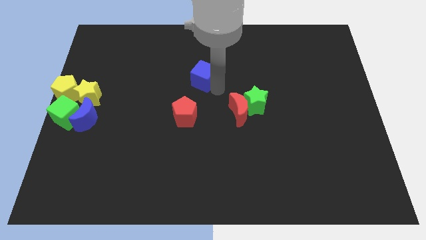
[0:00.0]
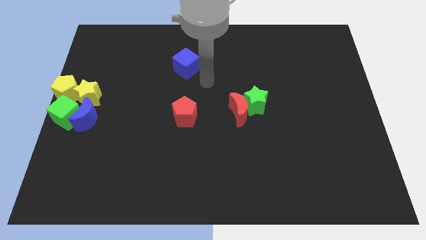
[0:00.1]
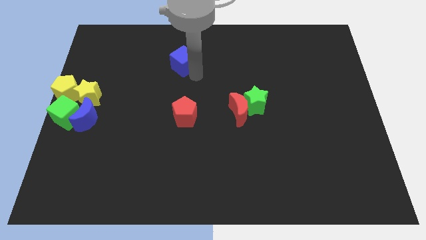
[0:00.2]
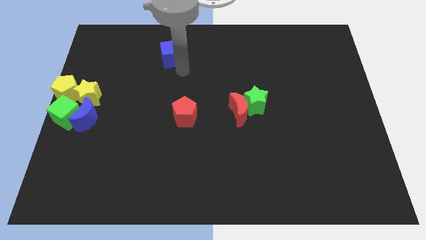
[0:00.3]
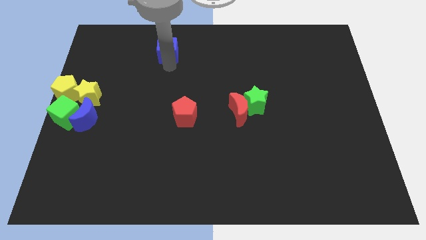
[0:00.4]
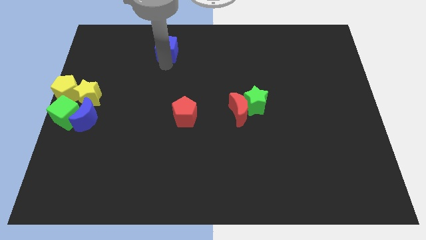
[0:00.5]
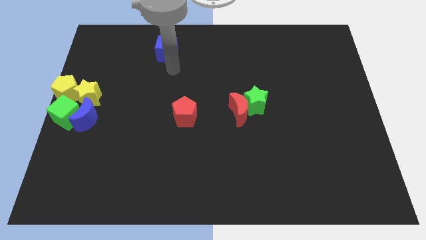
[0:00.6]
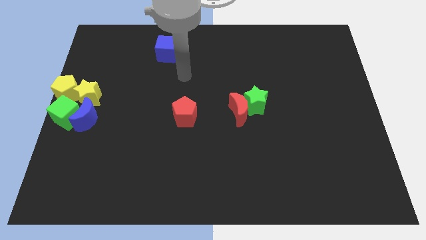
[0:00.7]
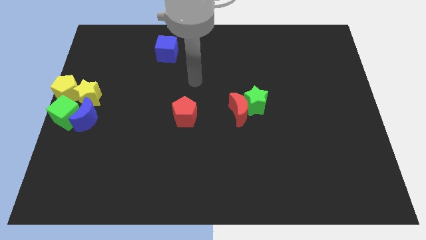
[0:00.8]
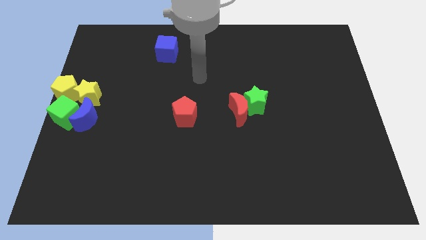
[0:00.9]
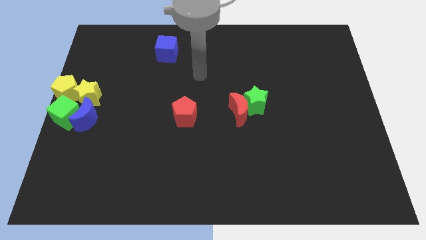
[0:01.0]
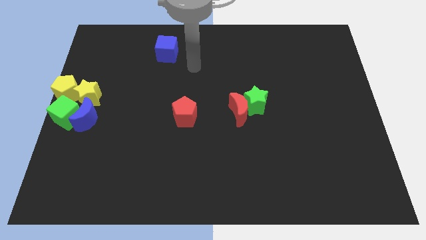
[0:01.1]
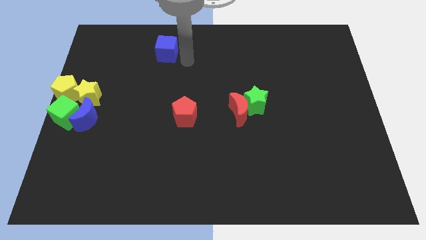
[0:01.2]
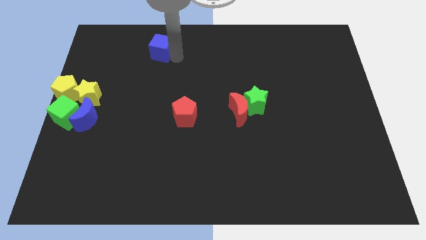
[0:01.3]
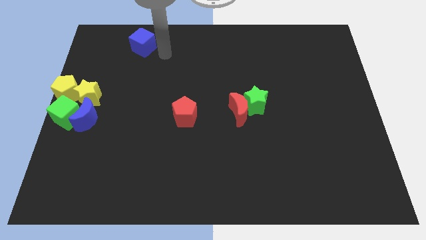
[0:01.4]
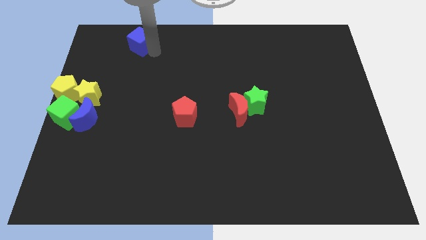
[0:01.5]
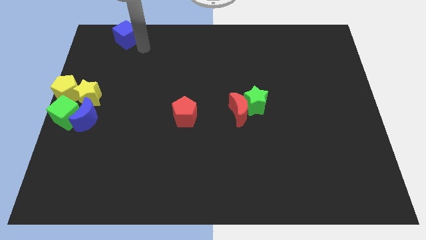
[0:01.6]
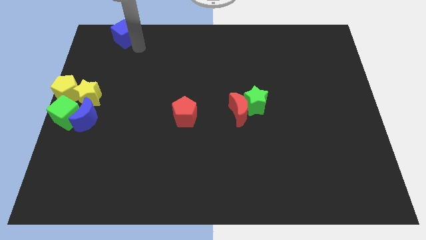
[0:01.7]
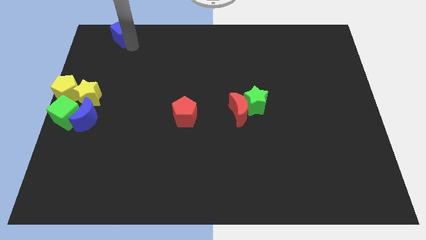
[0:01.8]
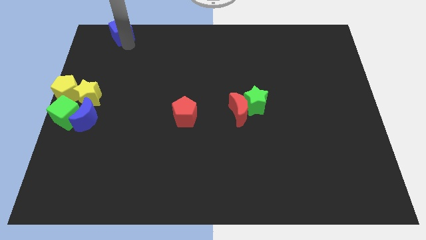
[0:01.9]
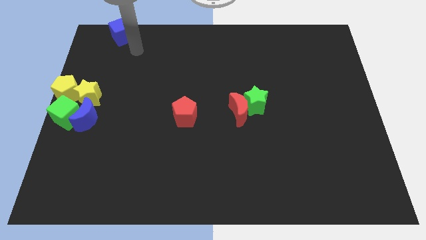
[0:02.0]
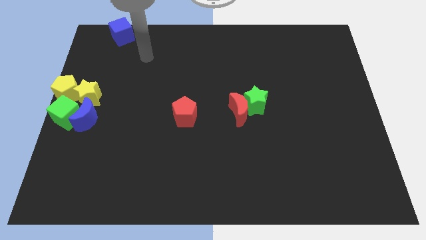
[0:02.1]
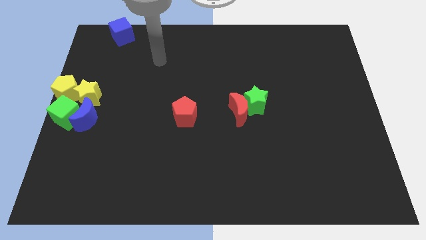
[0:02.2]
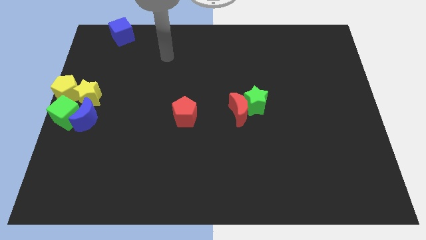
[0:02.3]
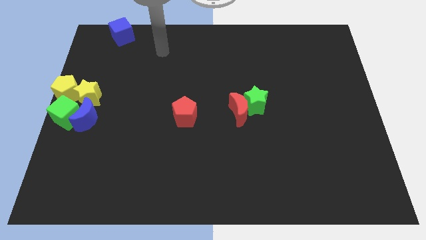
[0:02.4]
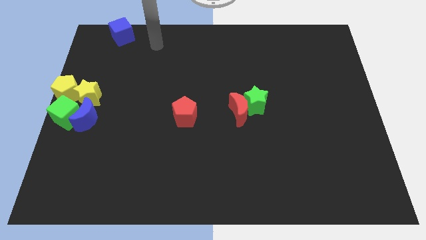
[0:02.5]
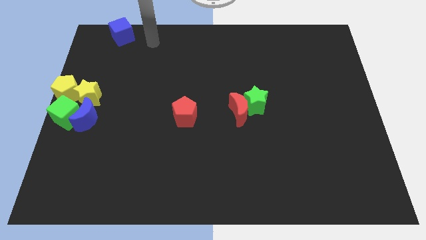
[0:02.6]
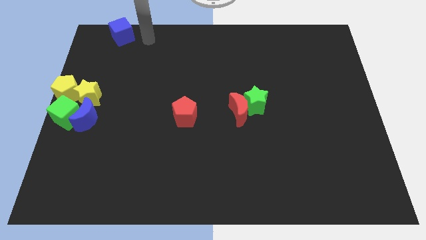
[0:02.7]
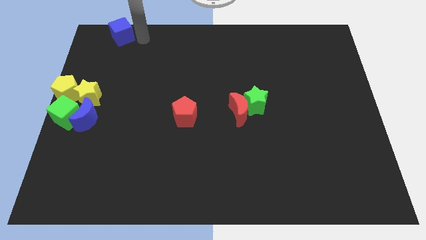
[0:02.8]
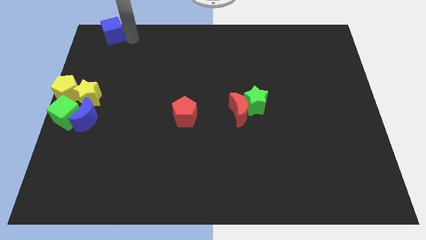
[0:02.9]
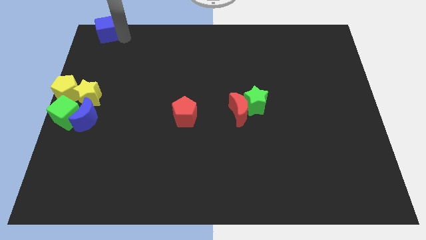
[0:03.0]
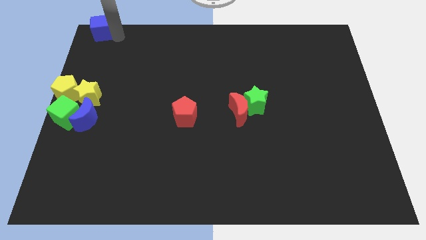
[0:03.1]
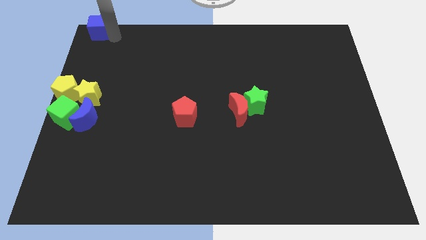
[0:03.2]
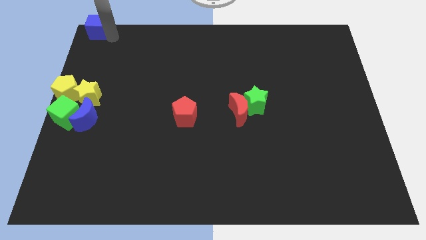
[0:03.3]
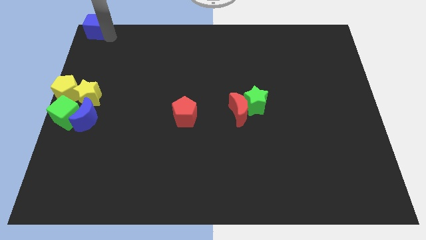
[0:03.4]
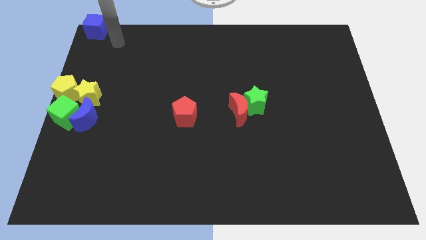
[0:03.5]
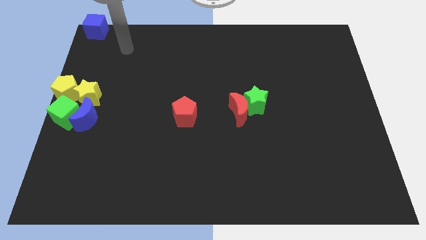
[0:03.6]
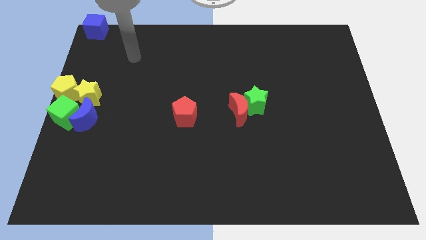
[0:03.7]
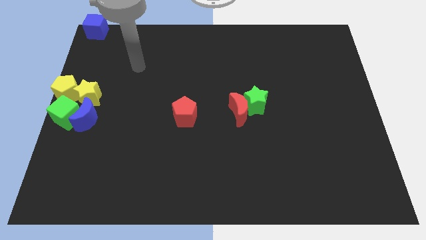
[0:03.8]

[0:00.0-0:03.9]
move the blue cube towards the top of the board

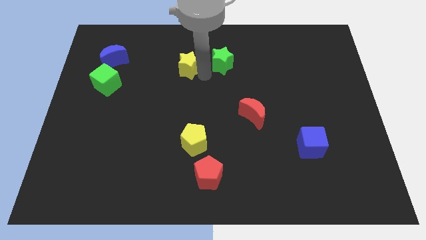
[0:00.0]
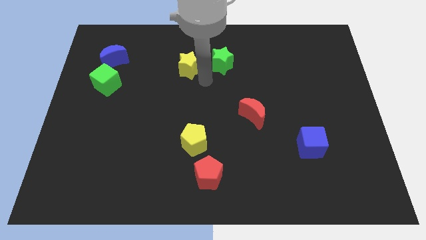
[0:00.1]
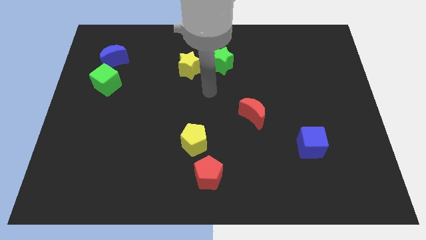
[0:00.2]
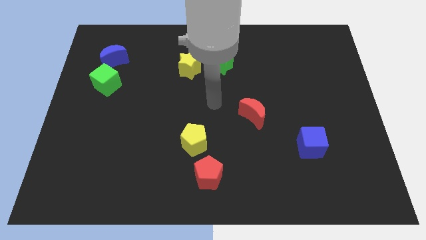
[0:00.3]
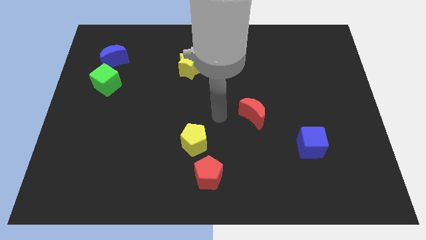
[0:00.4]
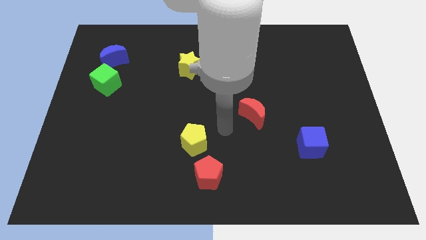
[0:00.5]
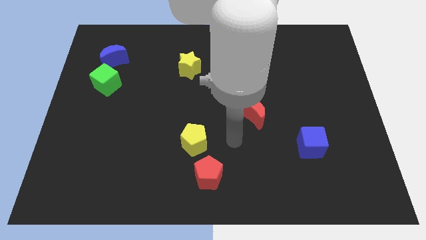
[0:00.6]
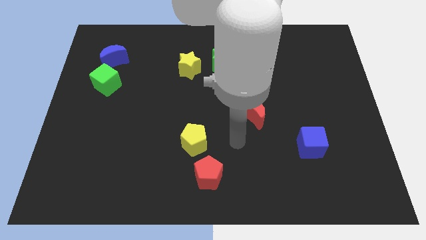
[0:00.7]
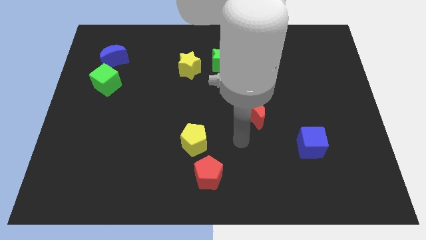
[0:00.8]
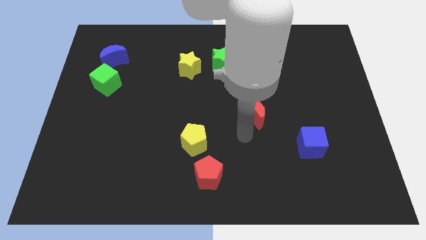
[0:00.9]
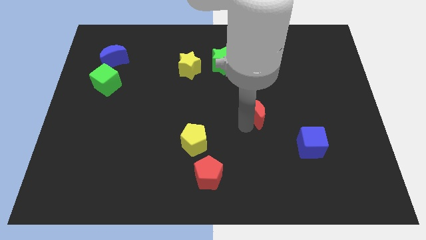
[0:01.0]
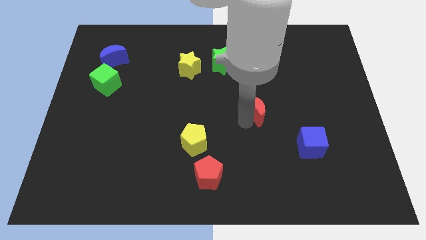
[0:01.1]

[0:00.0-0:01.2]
move your arm towards red crescent

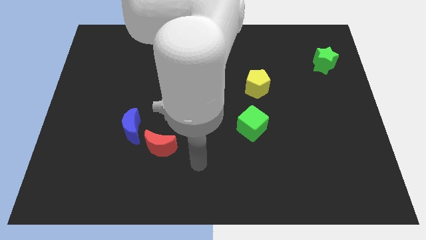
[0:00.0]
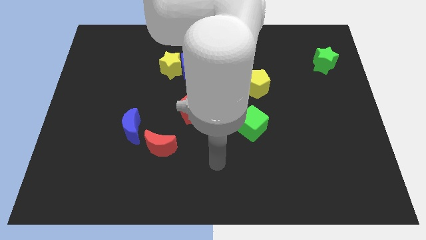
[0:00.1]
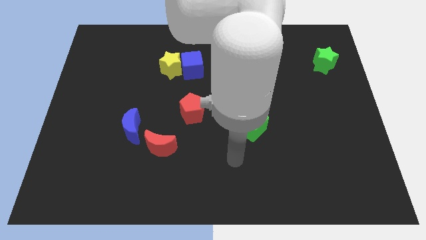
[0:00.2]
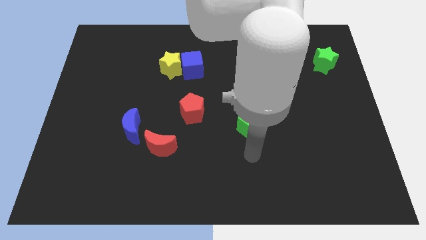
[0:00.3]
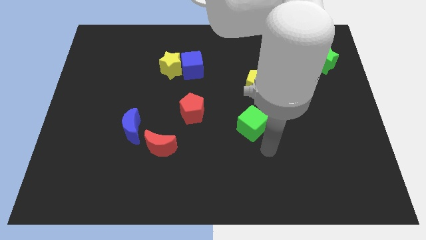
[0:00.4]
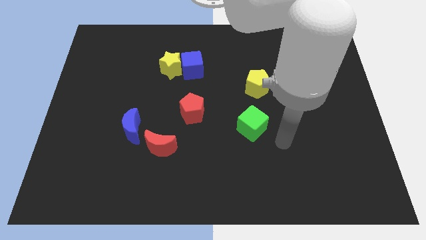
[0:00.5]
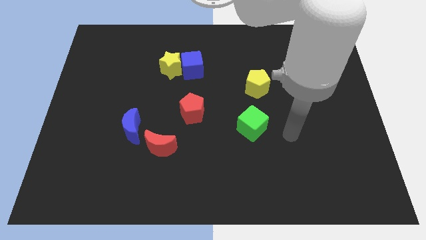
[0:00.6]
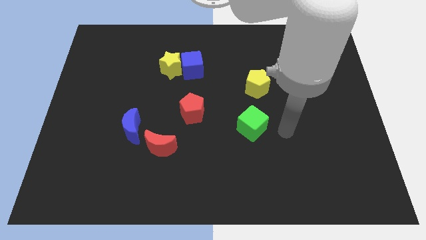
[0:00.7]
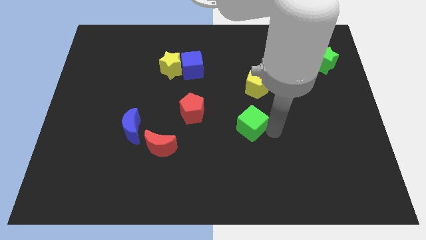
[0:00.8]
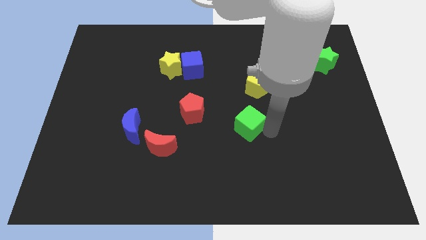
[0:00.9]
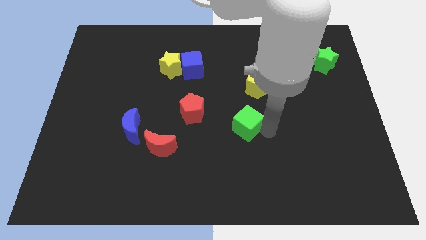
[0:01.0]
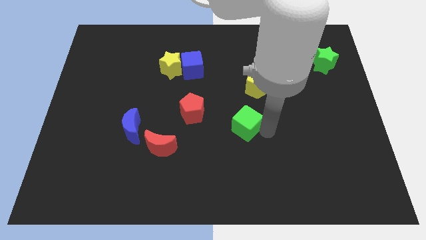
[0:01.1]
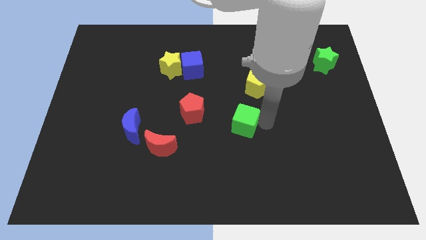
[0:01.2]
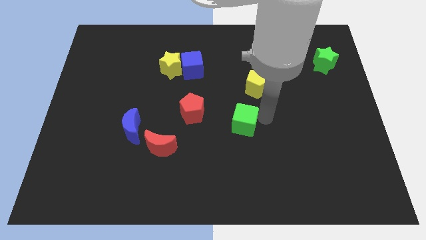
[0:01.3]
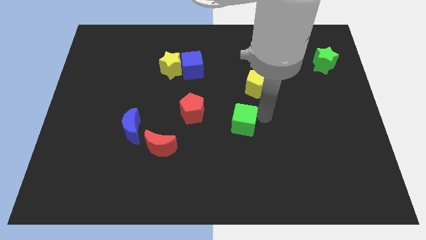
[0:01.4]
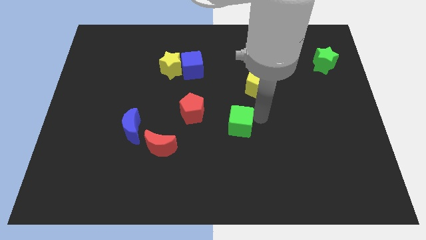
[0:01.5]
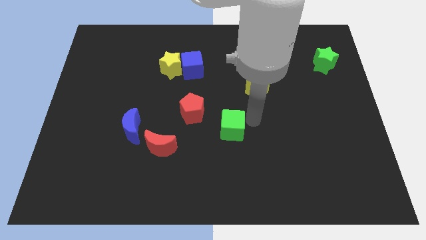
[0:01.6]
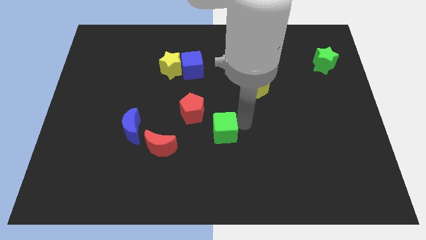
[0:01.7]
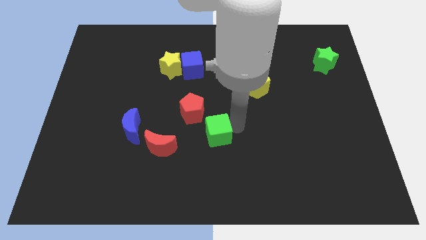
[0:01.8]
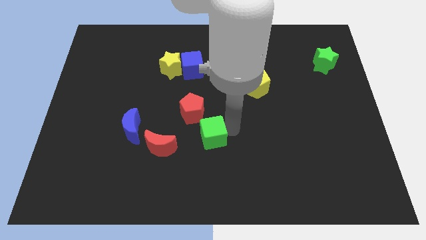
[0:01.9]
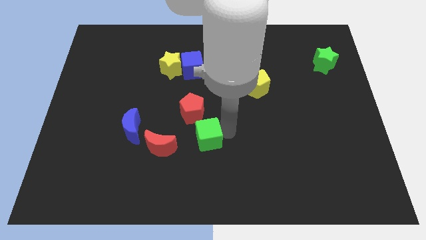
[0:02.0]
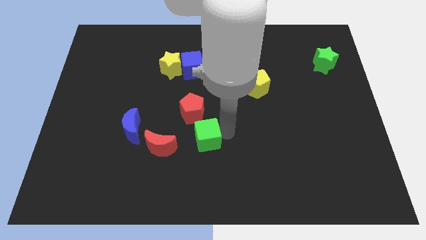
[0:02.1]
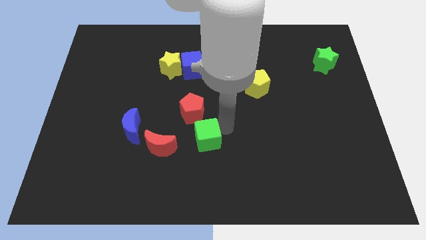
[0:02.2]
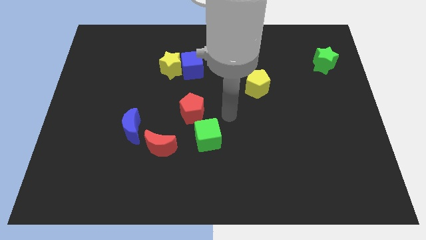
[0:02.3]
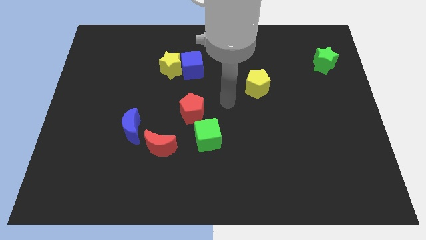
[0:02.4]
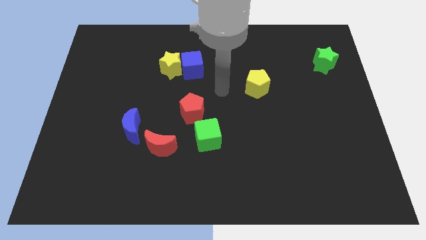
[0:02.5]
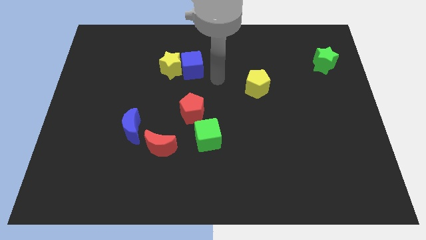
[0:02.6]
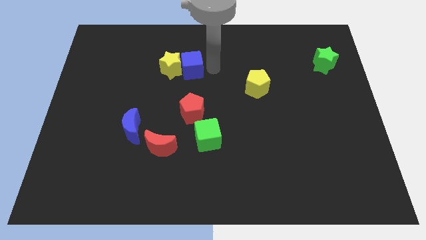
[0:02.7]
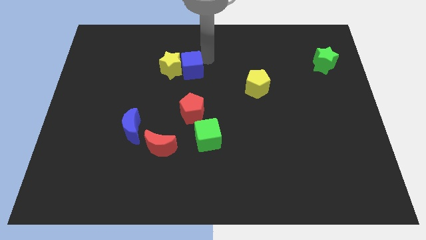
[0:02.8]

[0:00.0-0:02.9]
place the green cube to the bottom right of the red pentagon

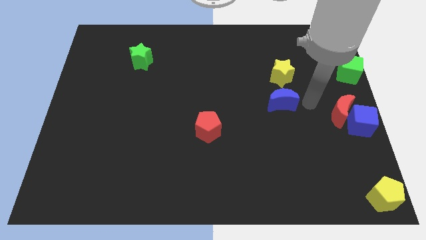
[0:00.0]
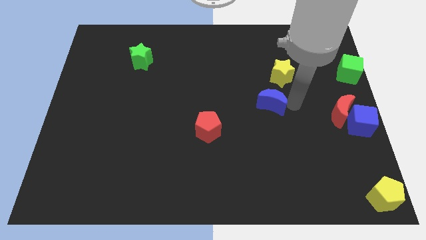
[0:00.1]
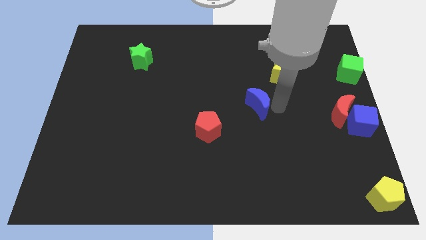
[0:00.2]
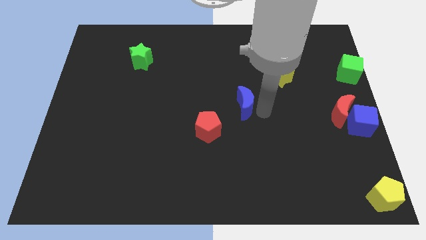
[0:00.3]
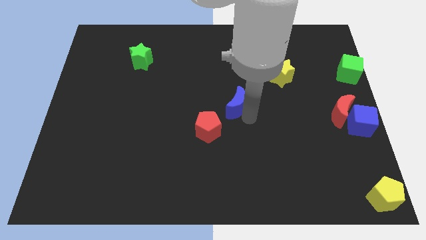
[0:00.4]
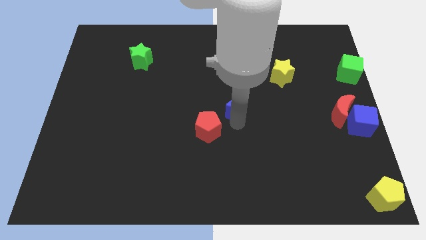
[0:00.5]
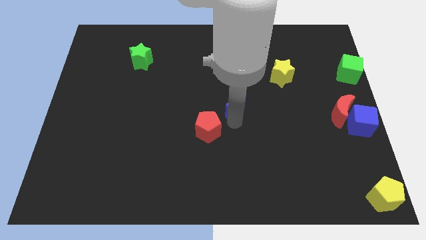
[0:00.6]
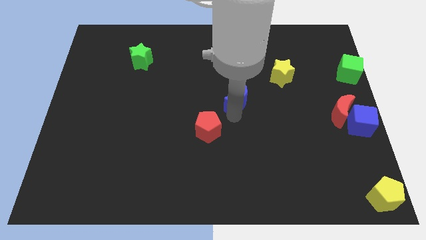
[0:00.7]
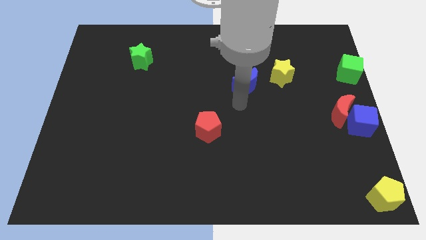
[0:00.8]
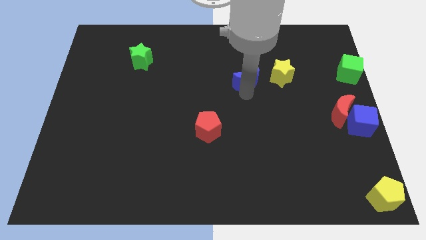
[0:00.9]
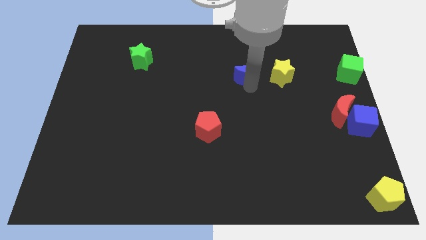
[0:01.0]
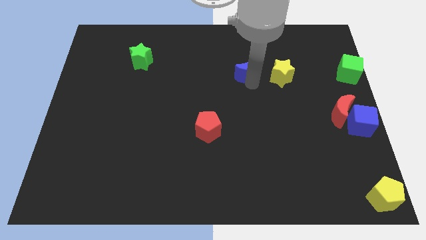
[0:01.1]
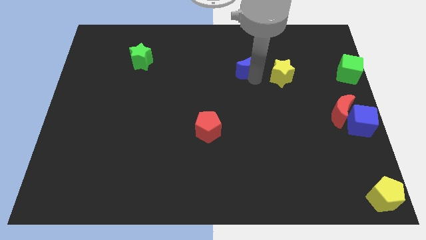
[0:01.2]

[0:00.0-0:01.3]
slide the blue moon to the left of the yellow star
